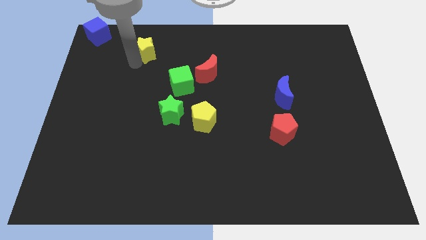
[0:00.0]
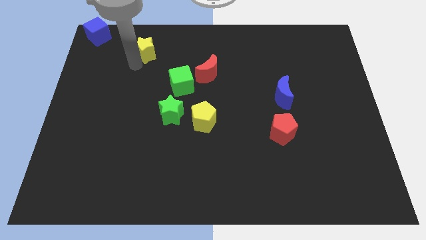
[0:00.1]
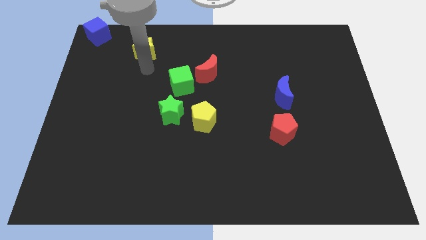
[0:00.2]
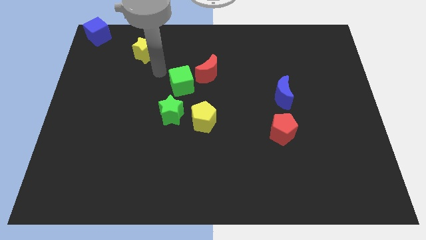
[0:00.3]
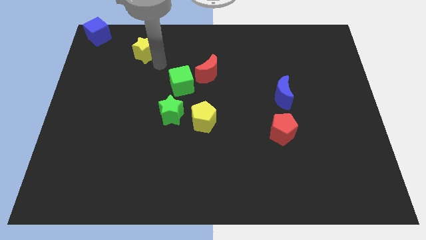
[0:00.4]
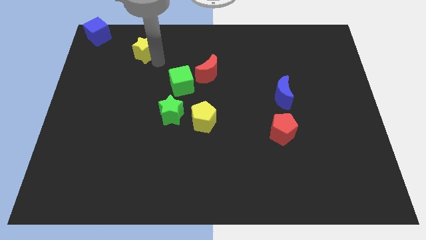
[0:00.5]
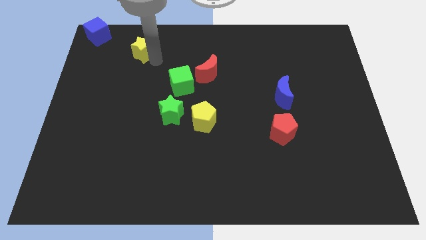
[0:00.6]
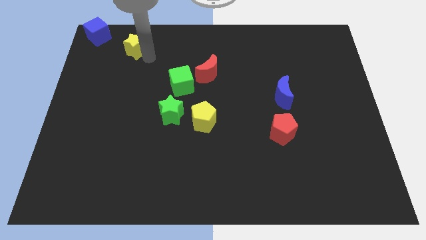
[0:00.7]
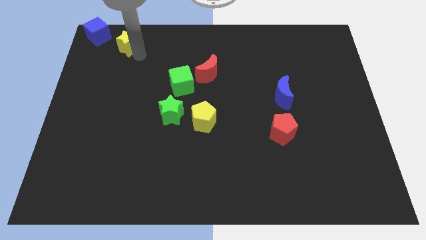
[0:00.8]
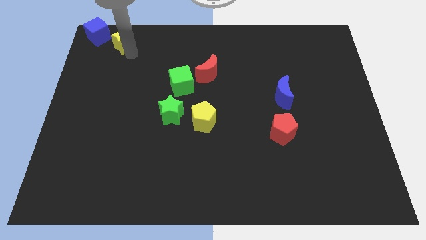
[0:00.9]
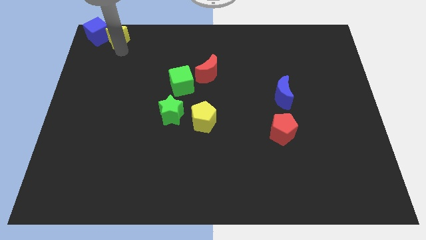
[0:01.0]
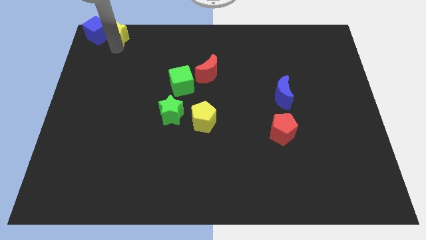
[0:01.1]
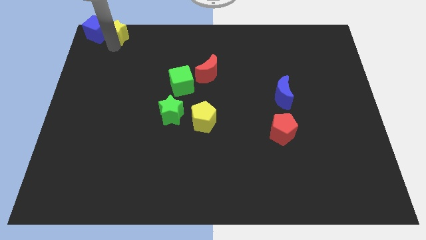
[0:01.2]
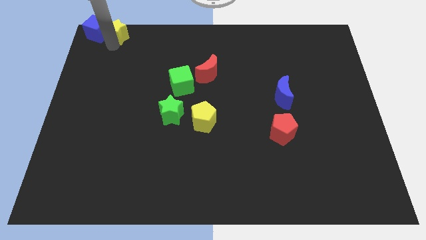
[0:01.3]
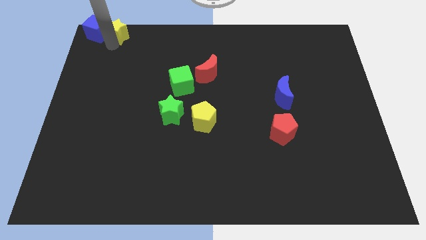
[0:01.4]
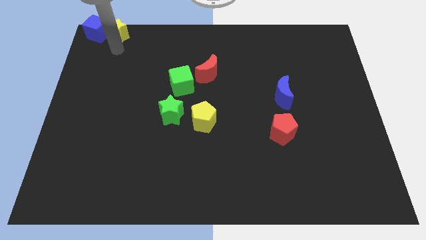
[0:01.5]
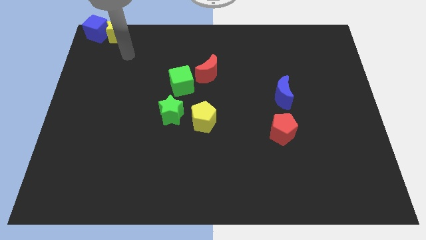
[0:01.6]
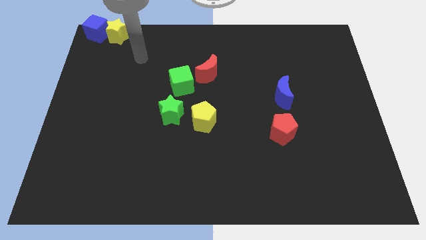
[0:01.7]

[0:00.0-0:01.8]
move the yellow star into the blue cube

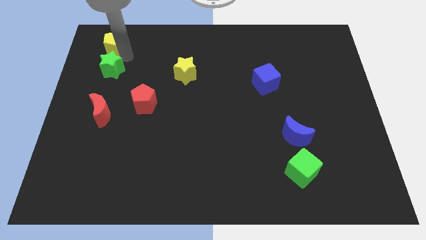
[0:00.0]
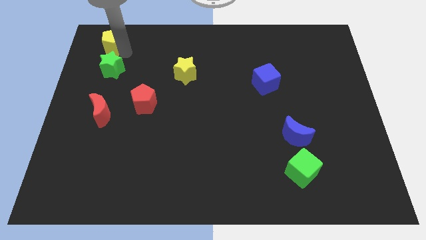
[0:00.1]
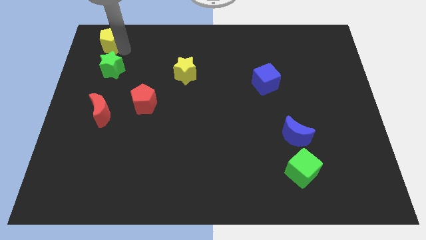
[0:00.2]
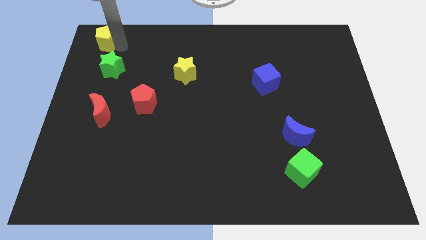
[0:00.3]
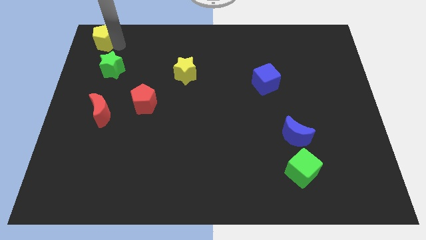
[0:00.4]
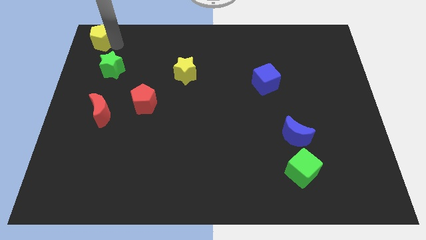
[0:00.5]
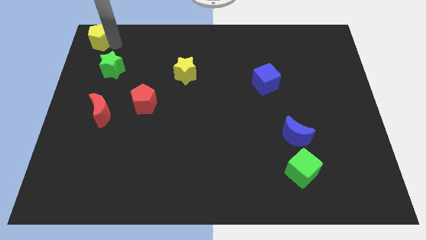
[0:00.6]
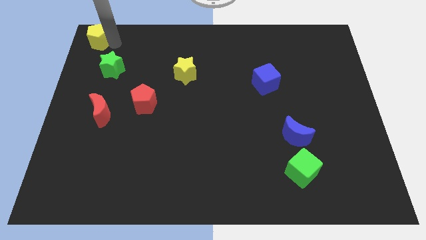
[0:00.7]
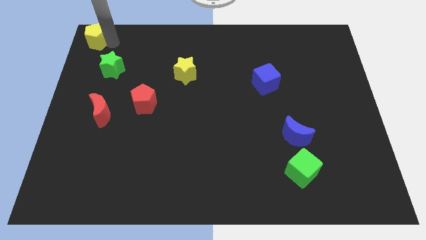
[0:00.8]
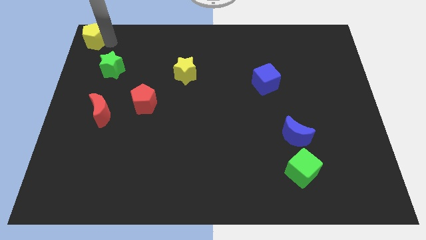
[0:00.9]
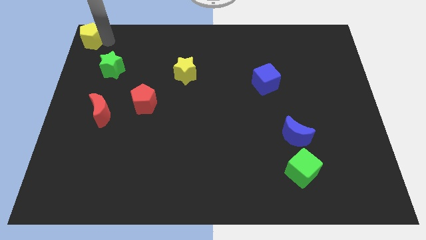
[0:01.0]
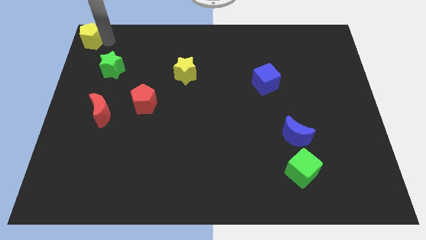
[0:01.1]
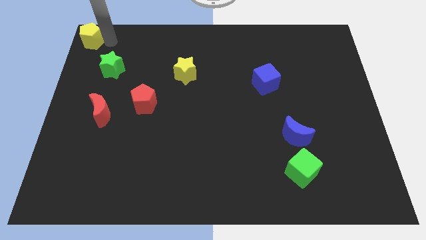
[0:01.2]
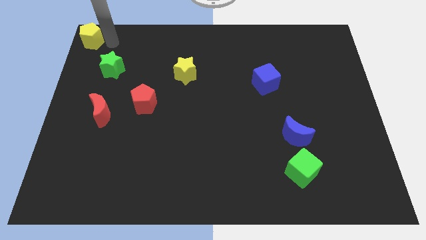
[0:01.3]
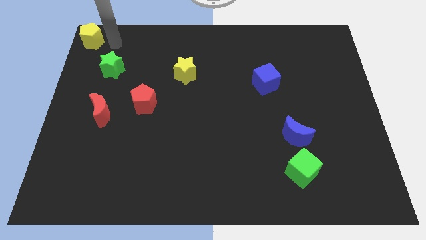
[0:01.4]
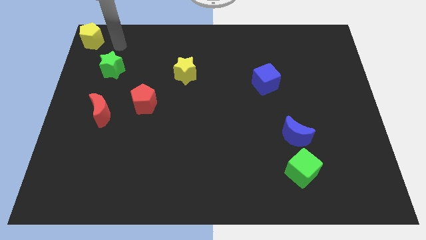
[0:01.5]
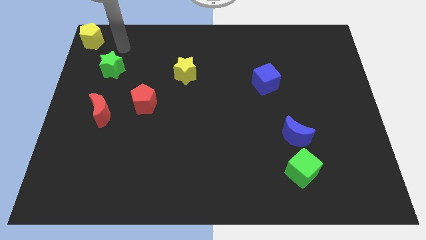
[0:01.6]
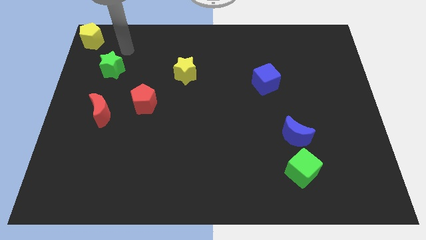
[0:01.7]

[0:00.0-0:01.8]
move the yellow pentagon to the top left corner of the board

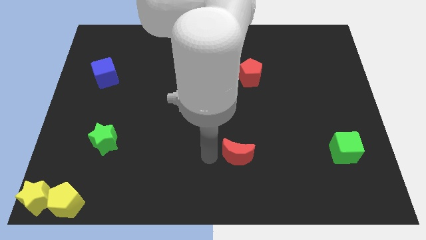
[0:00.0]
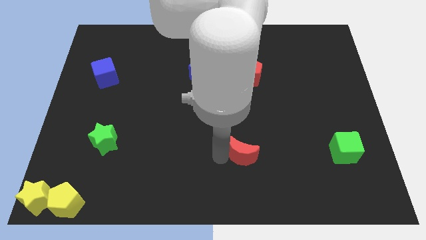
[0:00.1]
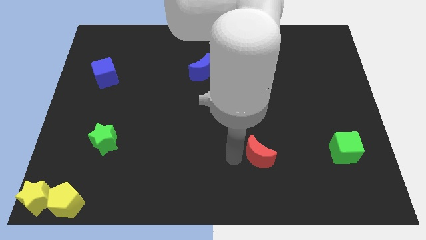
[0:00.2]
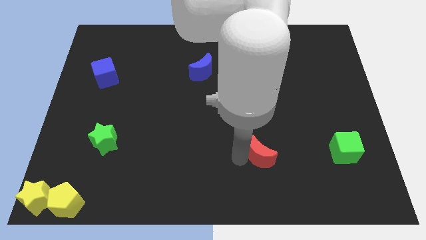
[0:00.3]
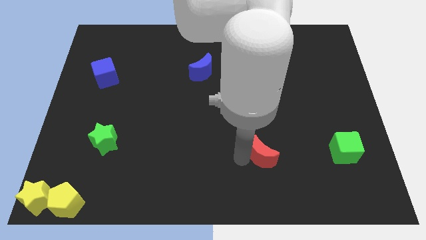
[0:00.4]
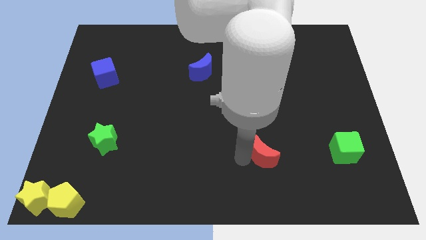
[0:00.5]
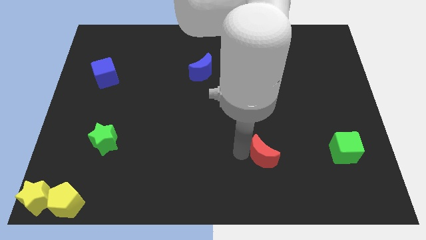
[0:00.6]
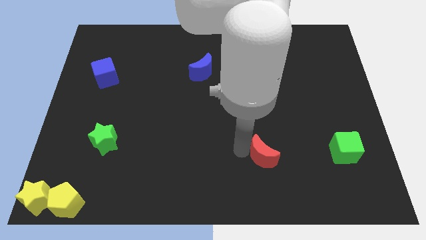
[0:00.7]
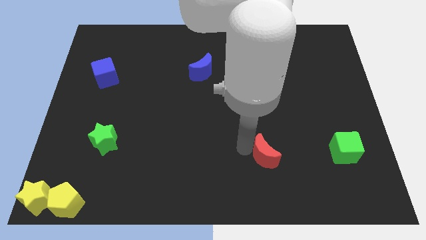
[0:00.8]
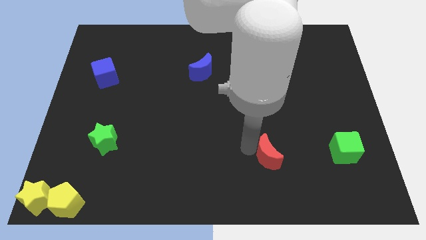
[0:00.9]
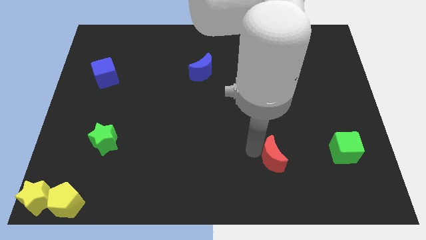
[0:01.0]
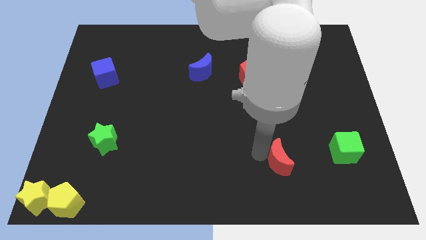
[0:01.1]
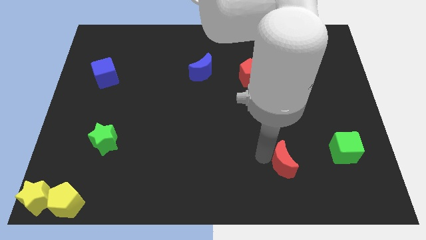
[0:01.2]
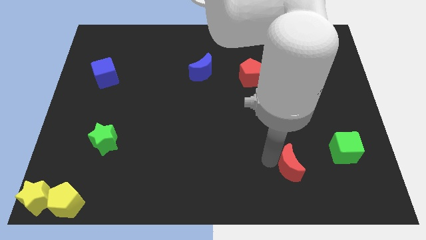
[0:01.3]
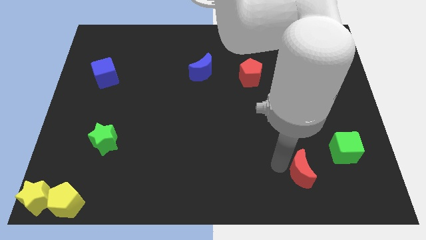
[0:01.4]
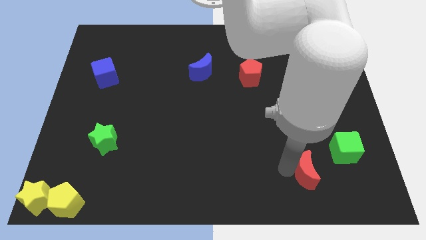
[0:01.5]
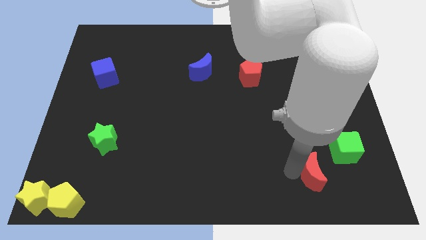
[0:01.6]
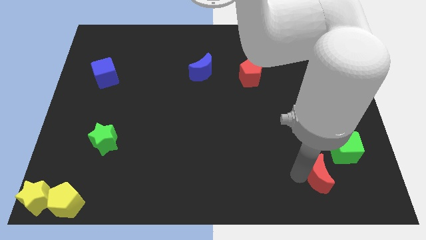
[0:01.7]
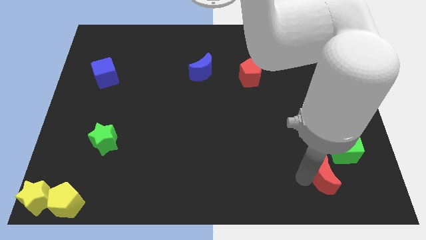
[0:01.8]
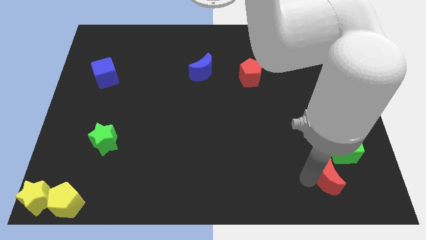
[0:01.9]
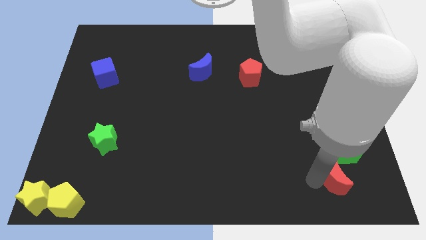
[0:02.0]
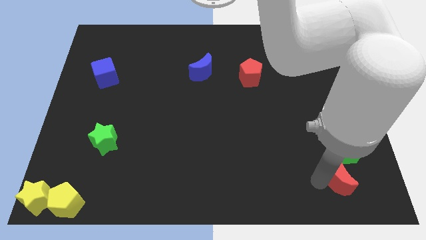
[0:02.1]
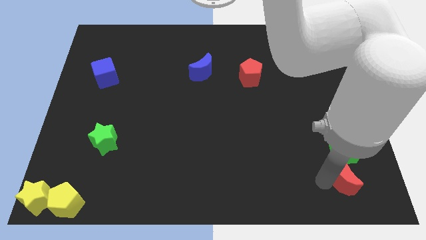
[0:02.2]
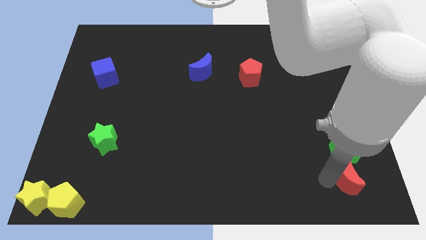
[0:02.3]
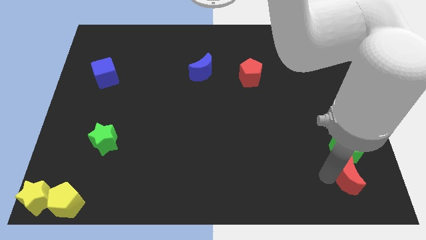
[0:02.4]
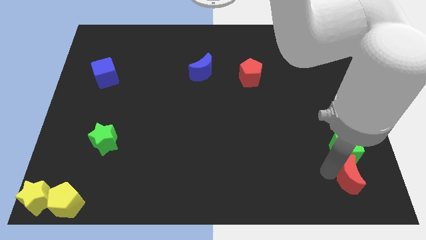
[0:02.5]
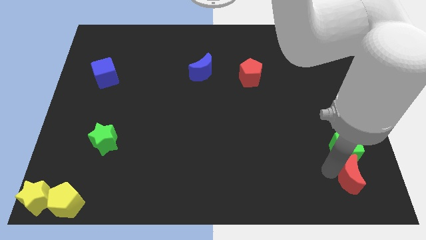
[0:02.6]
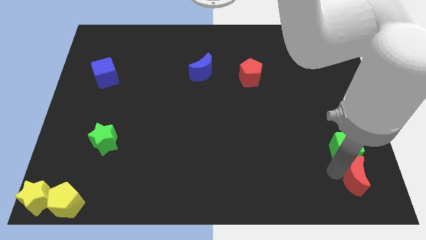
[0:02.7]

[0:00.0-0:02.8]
move the red moon to the bottom side of the green cube

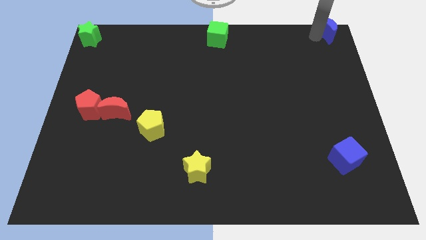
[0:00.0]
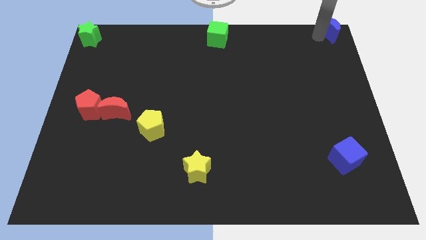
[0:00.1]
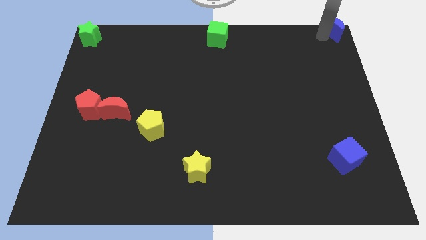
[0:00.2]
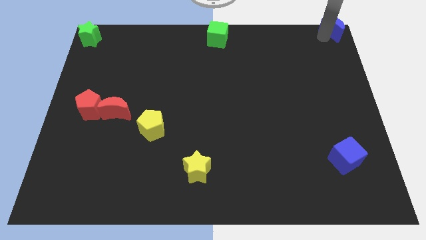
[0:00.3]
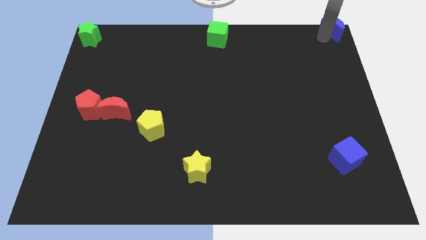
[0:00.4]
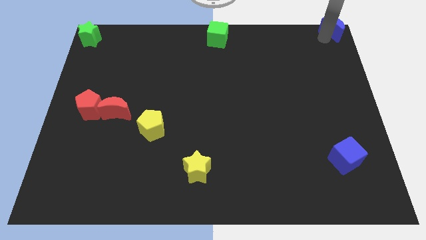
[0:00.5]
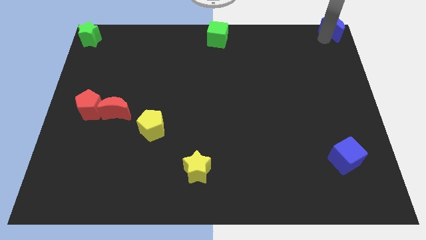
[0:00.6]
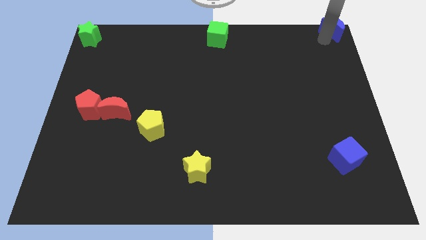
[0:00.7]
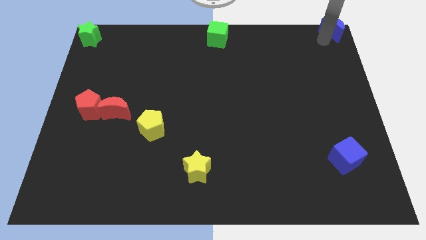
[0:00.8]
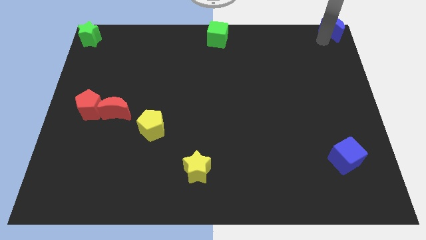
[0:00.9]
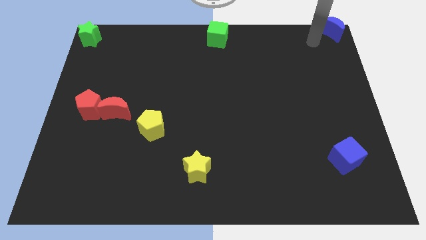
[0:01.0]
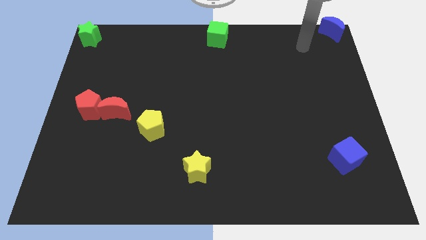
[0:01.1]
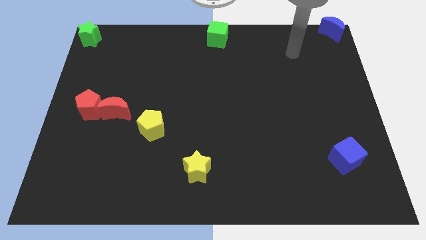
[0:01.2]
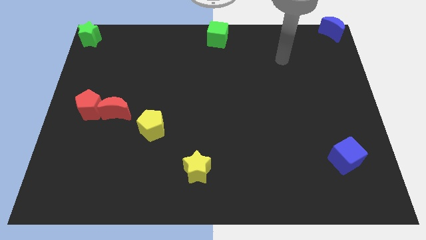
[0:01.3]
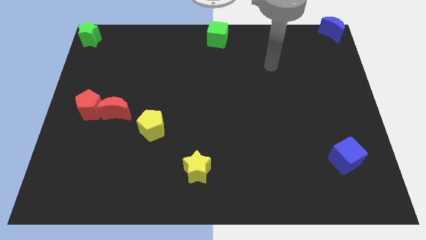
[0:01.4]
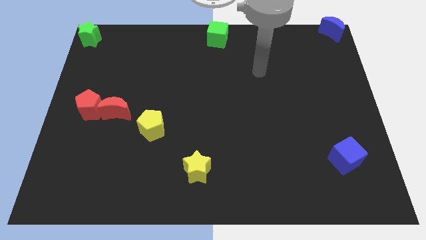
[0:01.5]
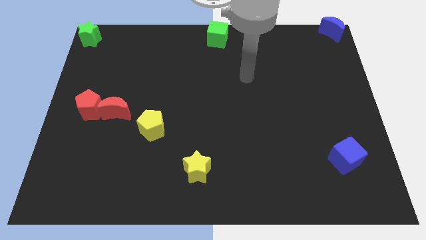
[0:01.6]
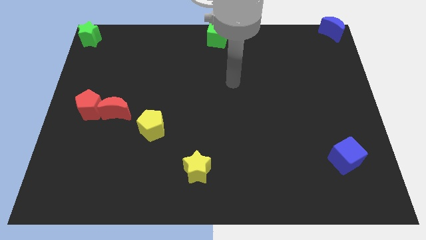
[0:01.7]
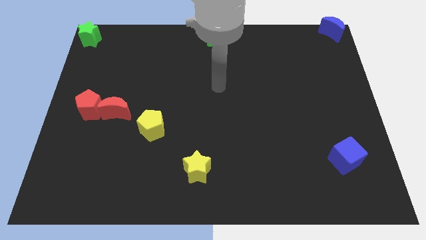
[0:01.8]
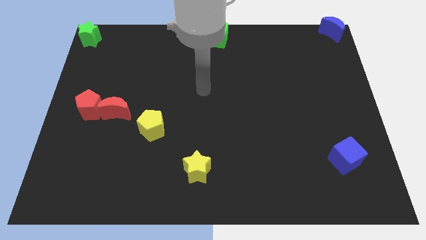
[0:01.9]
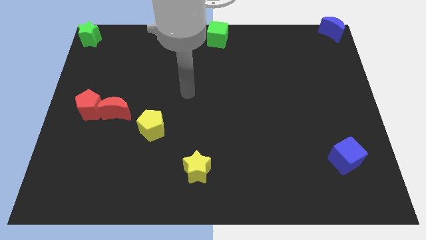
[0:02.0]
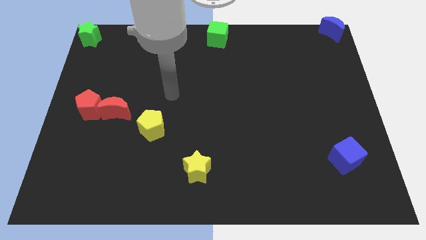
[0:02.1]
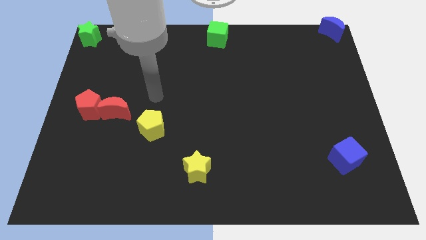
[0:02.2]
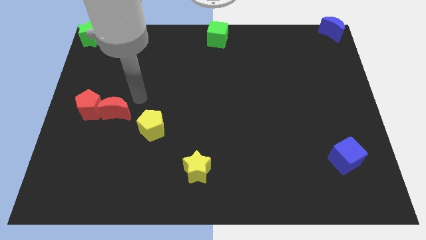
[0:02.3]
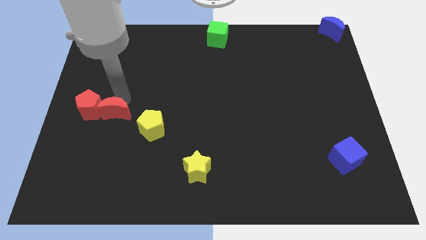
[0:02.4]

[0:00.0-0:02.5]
go away from the blue moon
